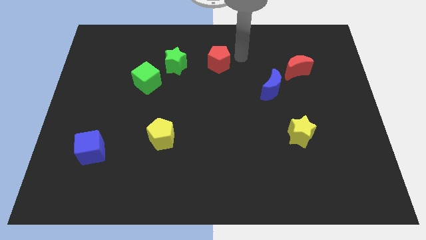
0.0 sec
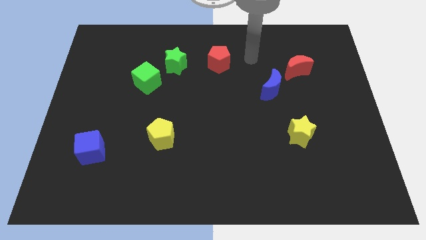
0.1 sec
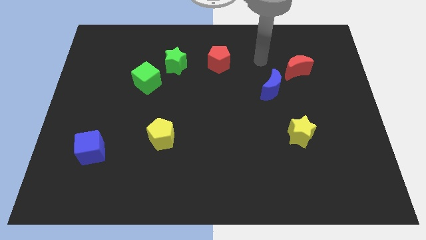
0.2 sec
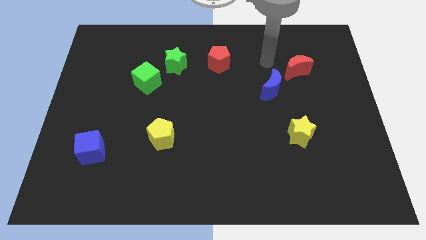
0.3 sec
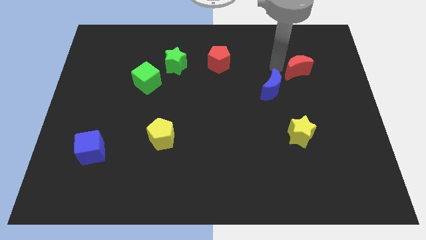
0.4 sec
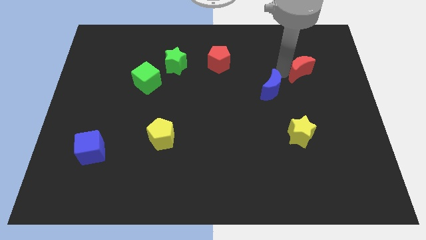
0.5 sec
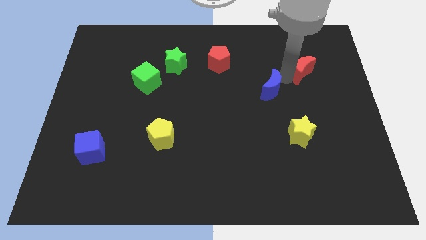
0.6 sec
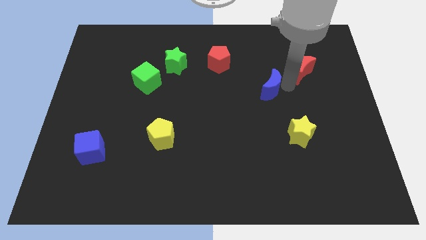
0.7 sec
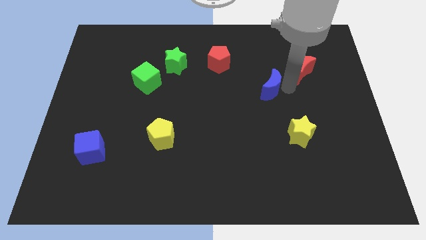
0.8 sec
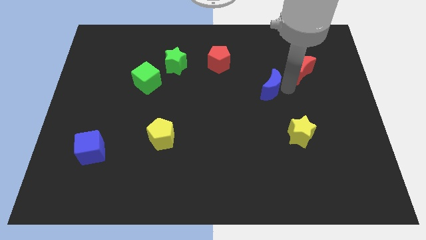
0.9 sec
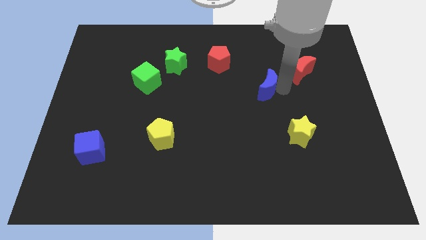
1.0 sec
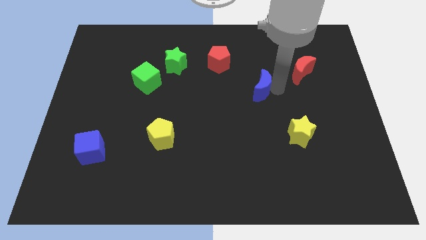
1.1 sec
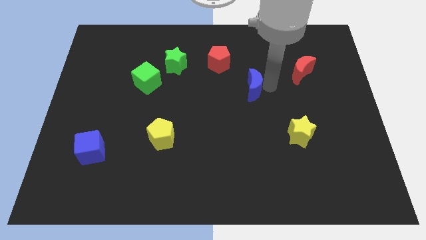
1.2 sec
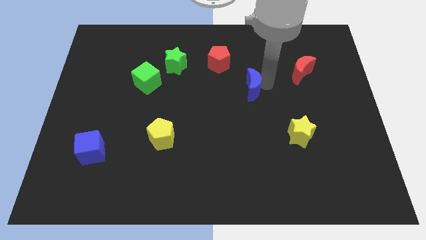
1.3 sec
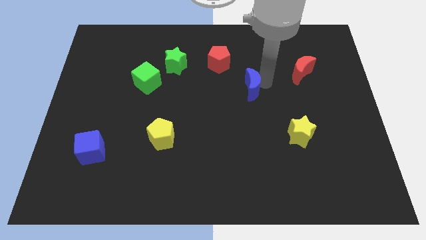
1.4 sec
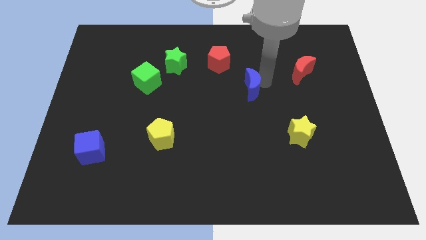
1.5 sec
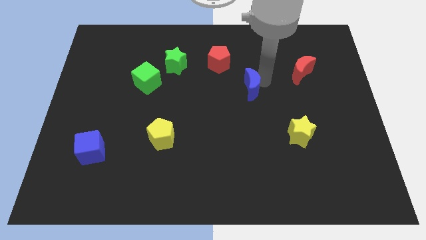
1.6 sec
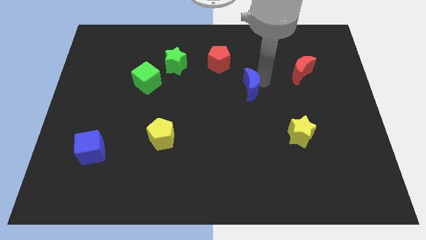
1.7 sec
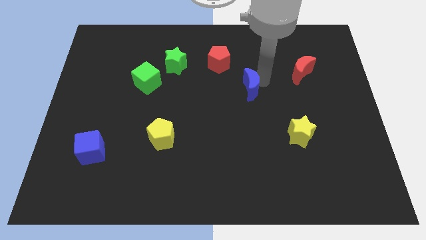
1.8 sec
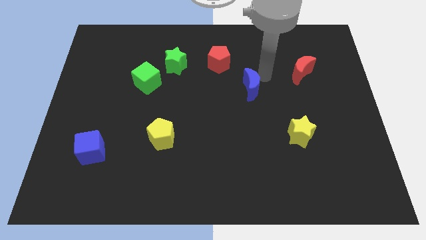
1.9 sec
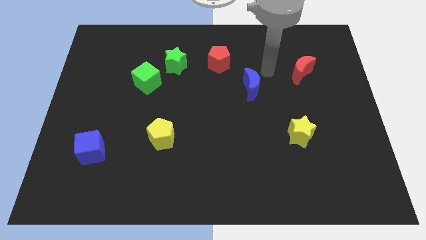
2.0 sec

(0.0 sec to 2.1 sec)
move blue crescent slightly towards left

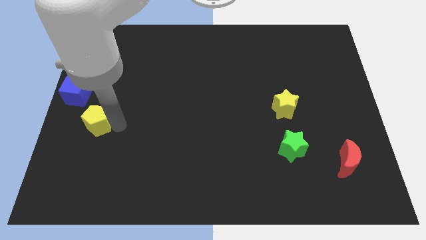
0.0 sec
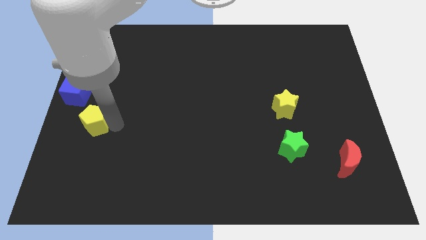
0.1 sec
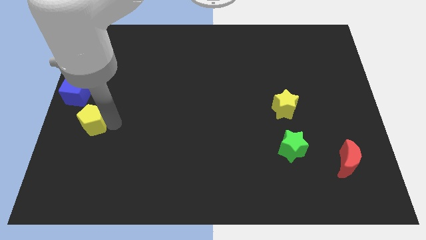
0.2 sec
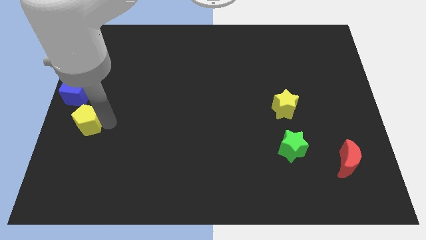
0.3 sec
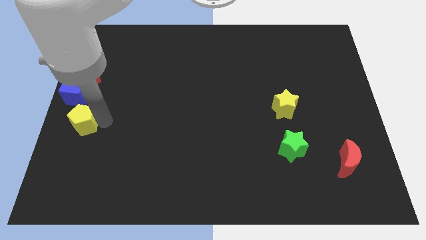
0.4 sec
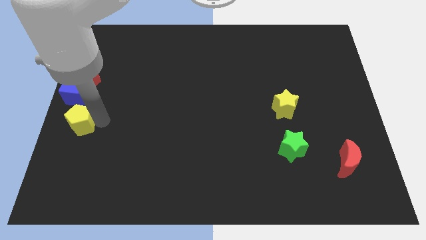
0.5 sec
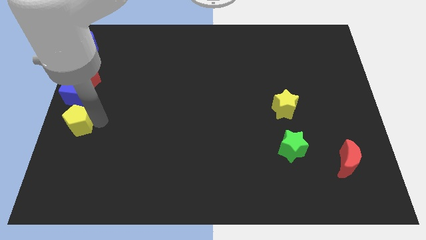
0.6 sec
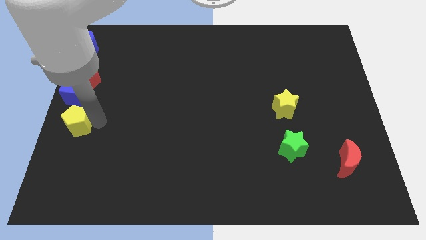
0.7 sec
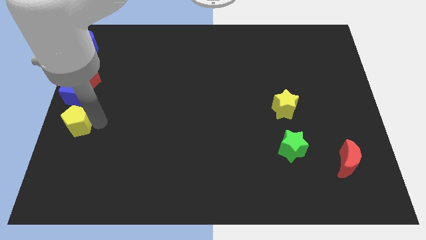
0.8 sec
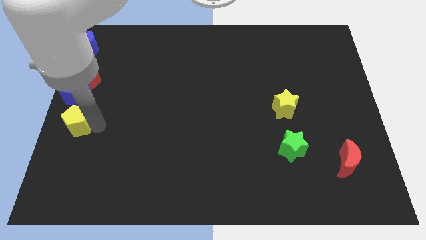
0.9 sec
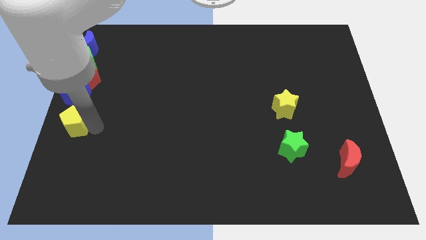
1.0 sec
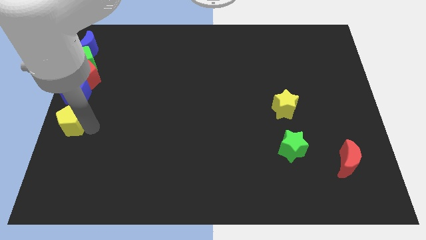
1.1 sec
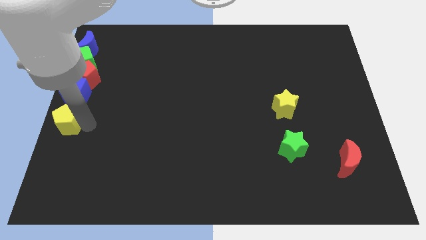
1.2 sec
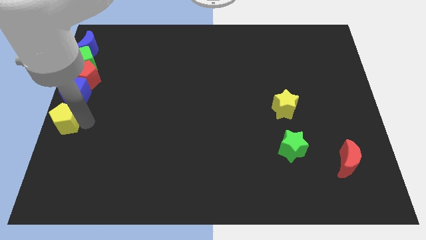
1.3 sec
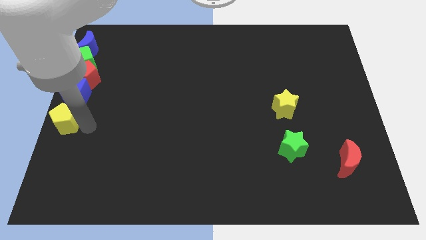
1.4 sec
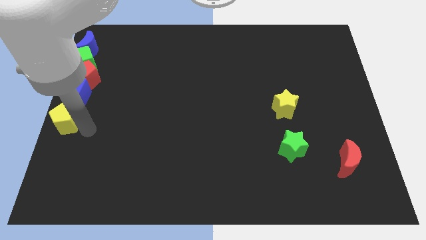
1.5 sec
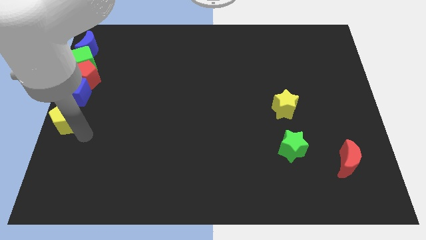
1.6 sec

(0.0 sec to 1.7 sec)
place the yellow pentagon below the blue cube

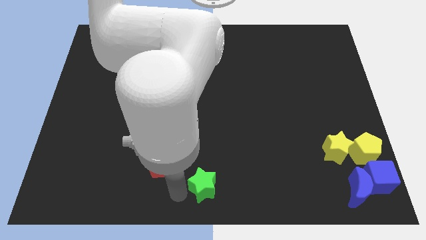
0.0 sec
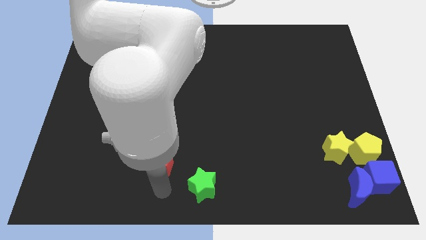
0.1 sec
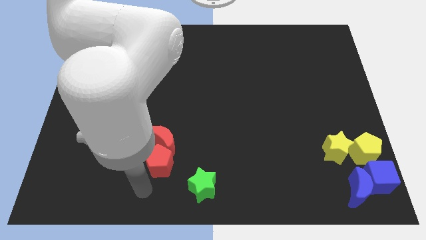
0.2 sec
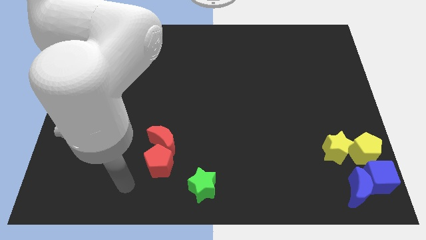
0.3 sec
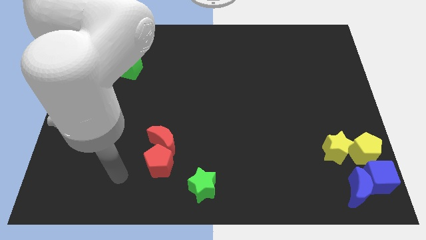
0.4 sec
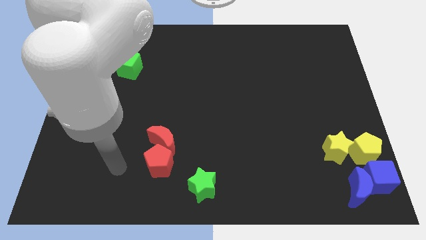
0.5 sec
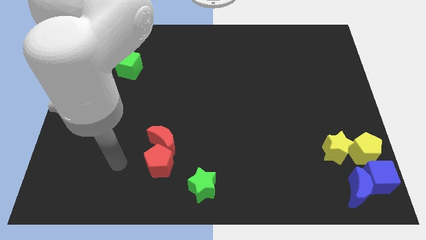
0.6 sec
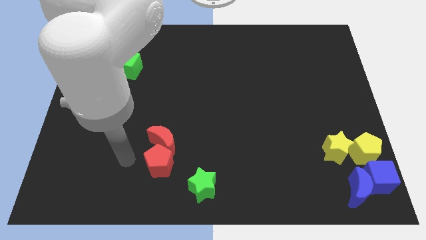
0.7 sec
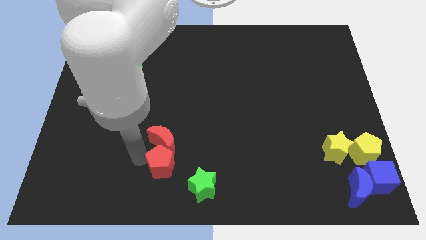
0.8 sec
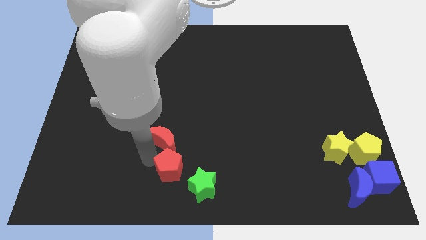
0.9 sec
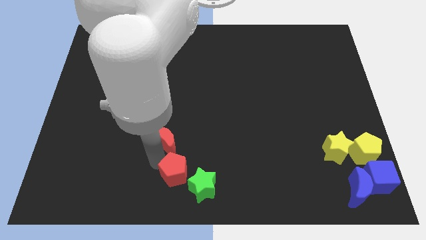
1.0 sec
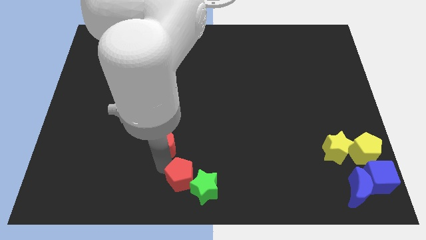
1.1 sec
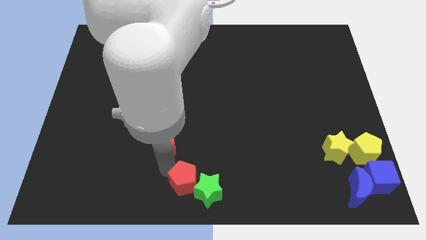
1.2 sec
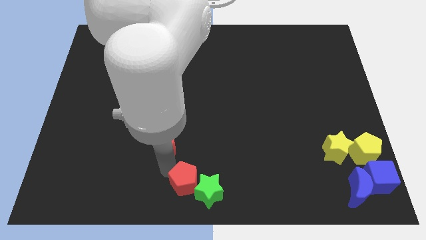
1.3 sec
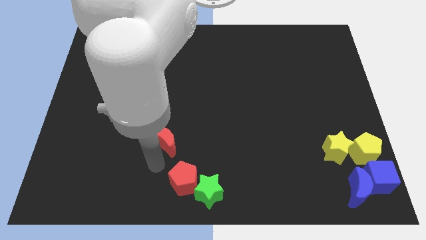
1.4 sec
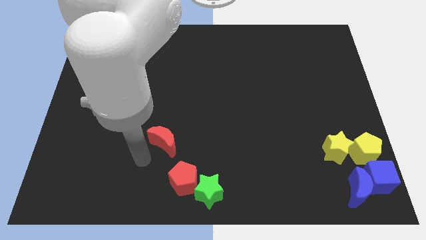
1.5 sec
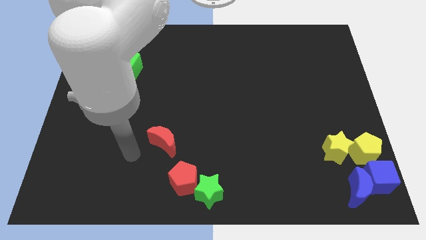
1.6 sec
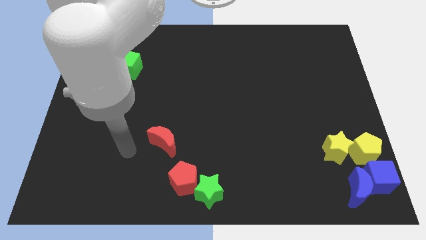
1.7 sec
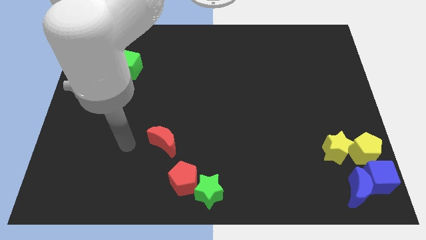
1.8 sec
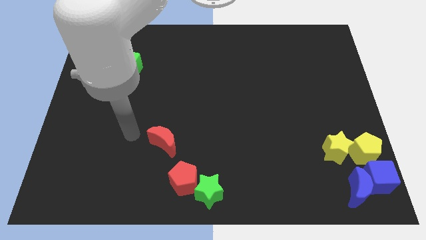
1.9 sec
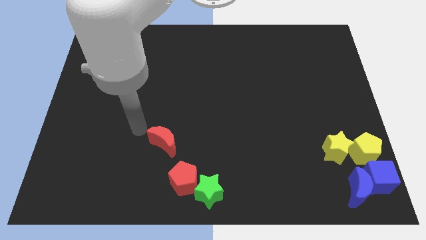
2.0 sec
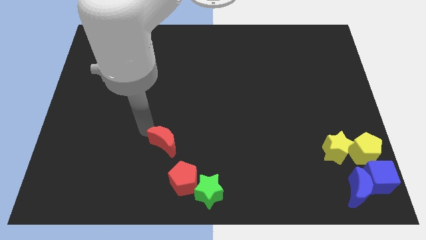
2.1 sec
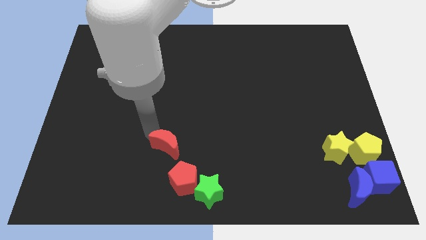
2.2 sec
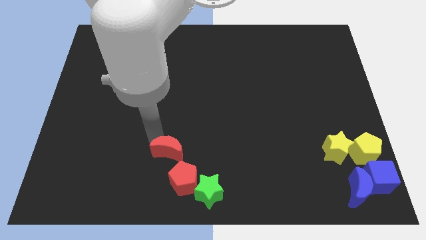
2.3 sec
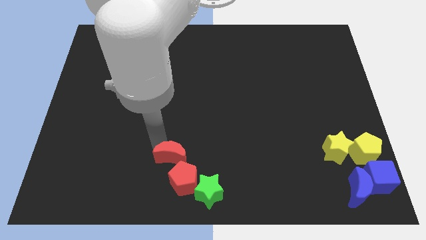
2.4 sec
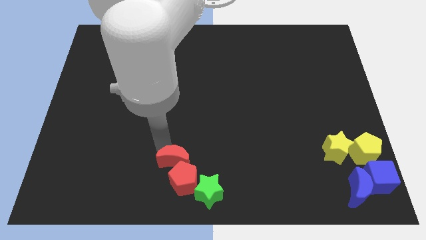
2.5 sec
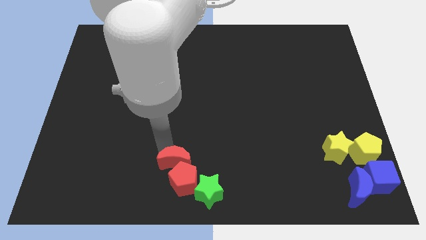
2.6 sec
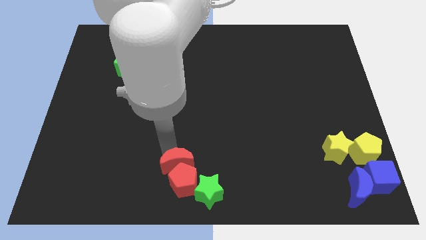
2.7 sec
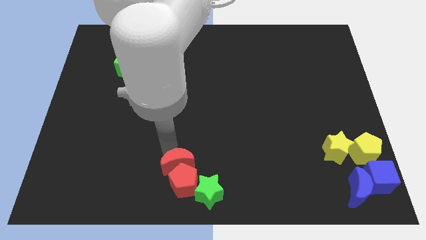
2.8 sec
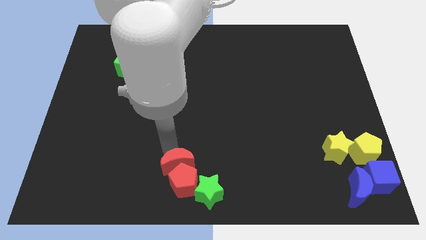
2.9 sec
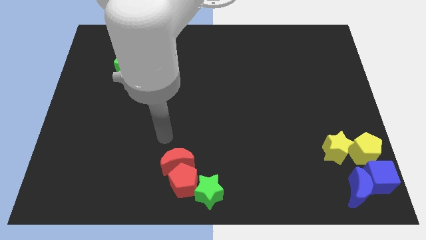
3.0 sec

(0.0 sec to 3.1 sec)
push the red blocks towards the green star

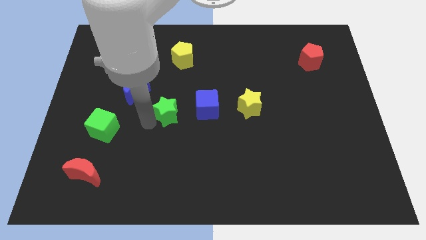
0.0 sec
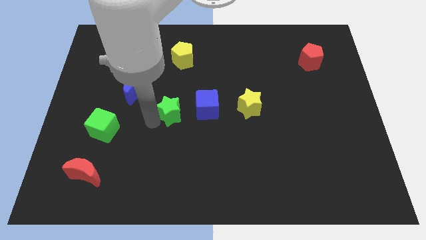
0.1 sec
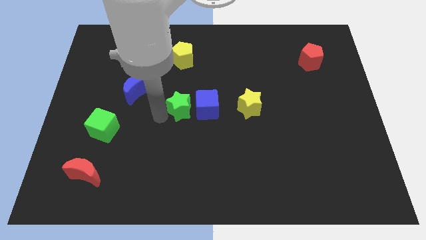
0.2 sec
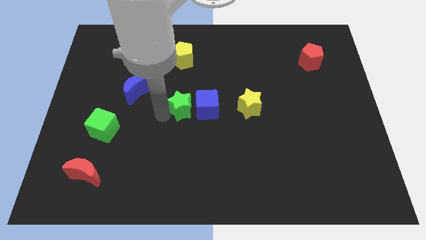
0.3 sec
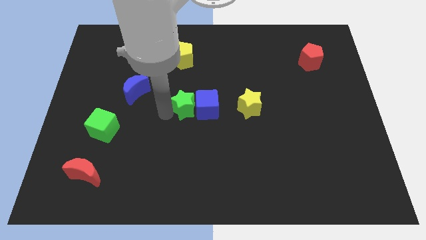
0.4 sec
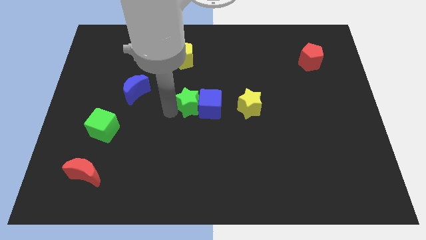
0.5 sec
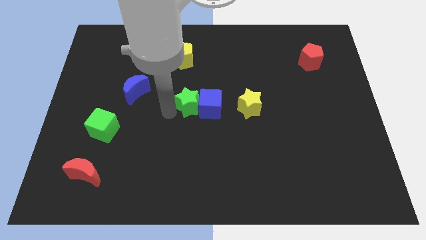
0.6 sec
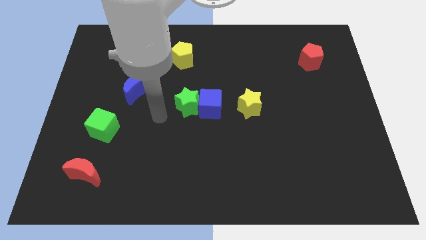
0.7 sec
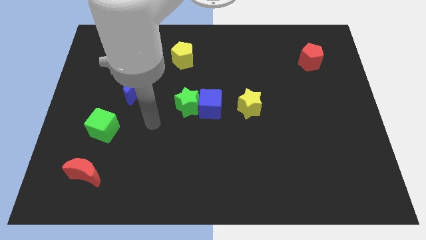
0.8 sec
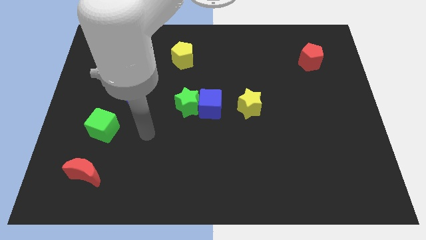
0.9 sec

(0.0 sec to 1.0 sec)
push the green star into the blue cube

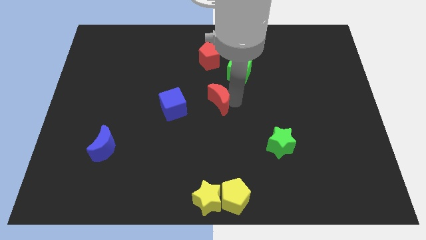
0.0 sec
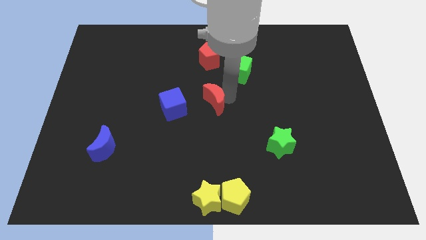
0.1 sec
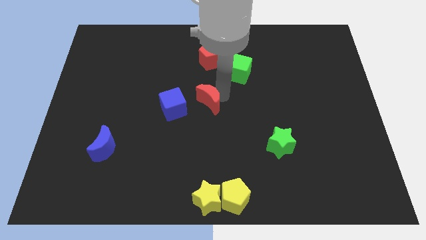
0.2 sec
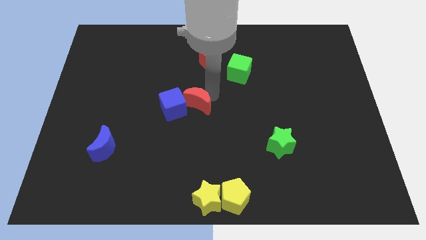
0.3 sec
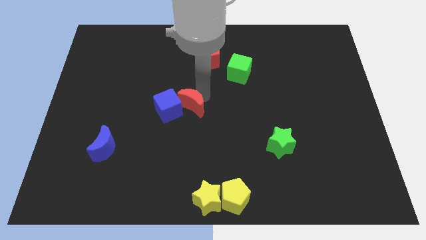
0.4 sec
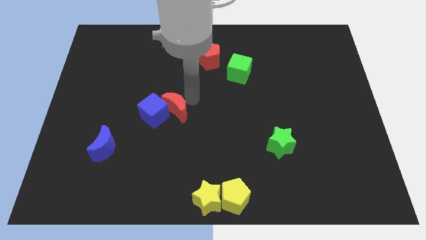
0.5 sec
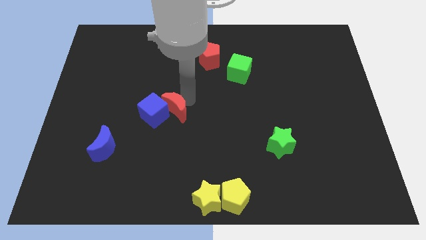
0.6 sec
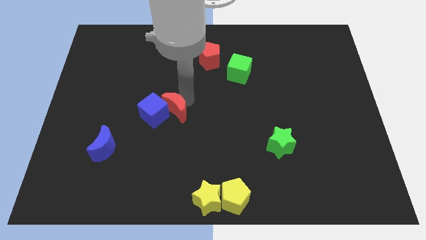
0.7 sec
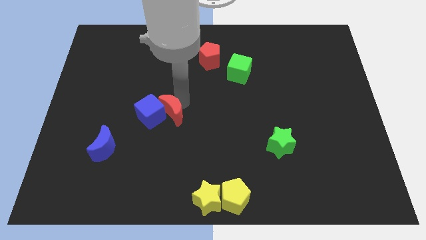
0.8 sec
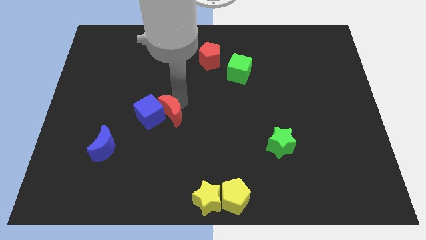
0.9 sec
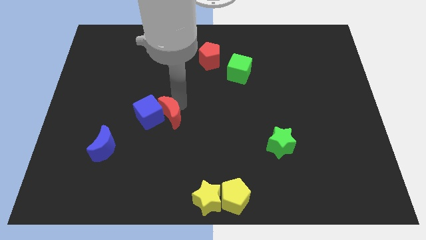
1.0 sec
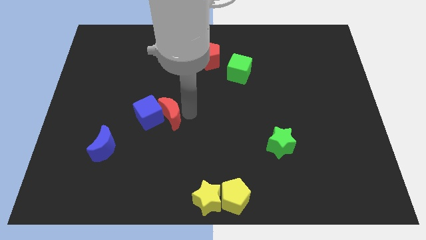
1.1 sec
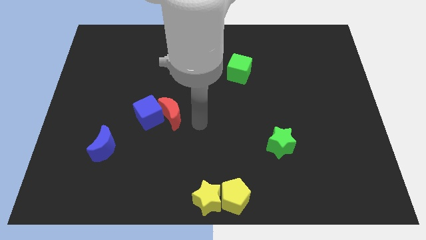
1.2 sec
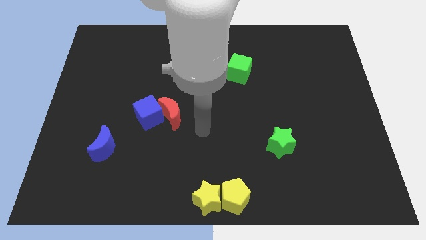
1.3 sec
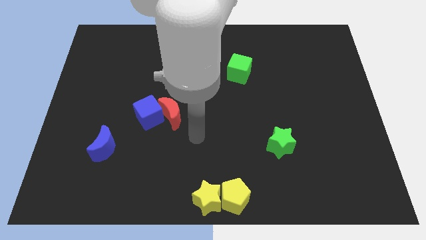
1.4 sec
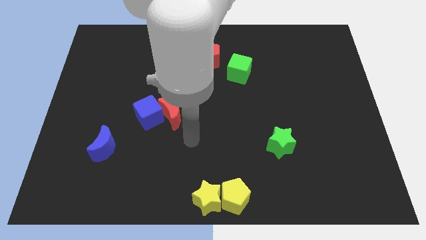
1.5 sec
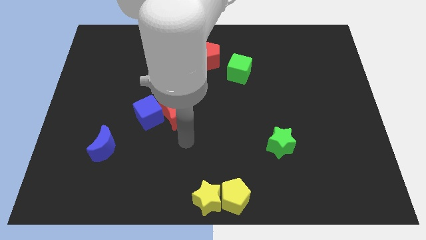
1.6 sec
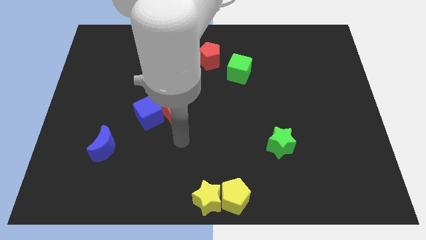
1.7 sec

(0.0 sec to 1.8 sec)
push the red moon close to the blue cube
